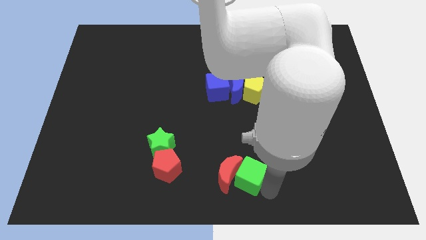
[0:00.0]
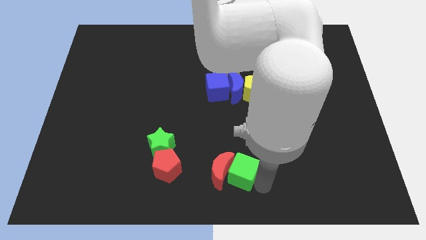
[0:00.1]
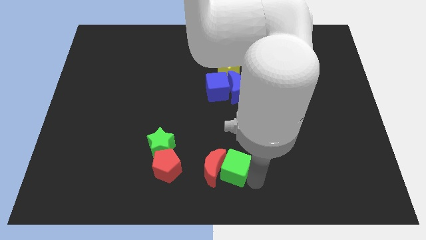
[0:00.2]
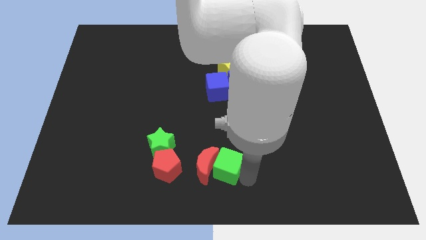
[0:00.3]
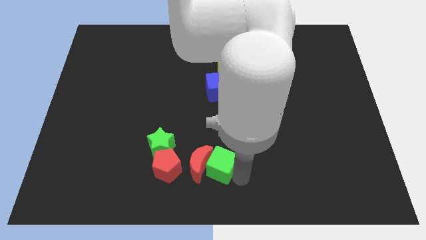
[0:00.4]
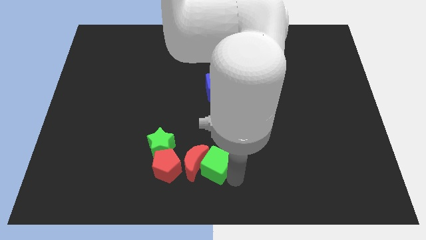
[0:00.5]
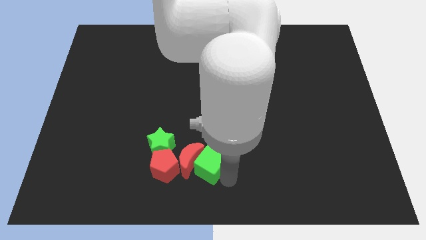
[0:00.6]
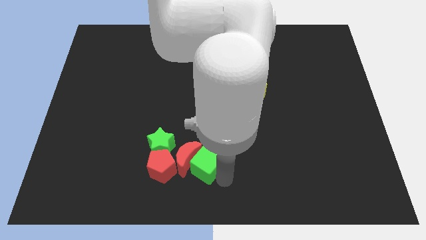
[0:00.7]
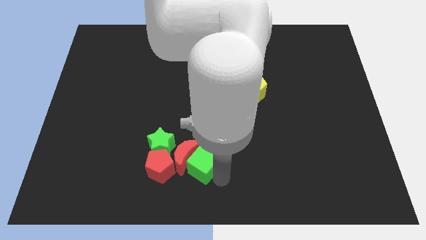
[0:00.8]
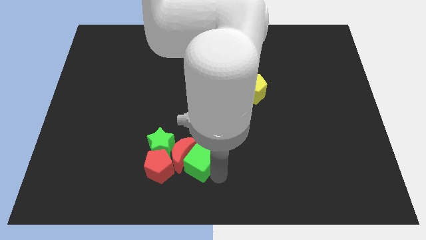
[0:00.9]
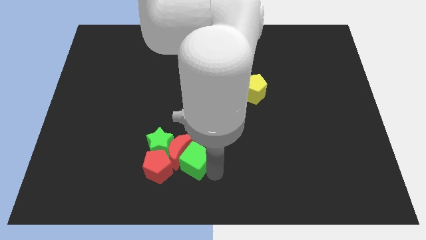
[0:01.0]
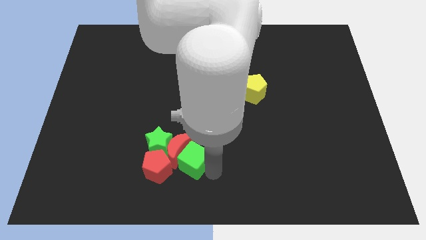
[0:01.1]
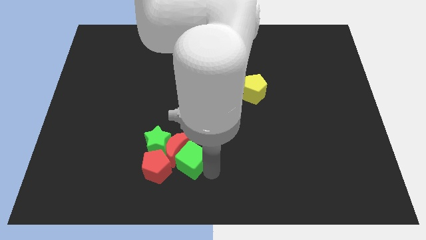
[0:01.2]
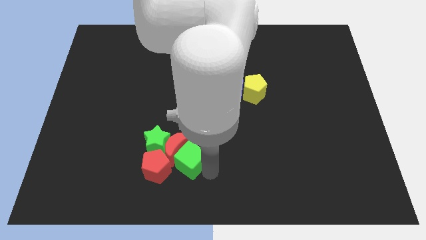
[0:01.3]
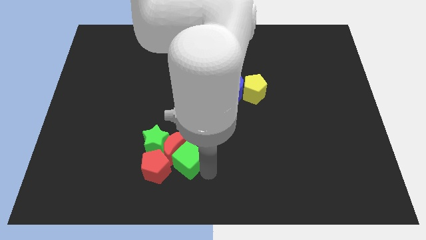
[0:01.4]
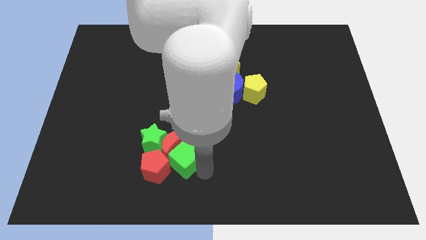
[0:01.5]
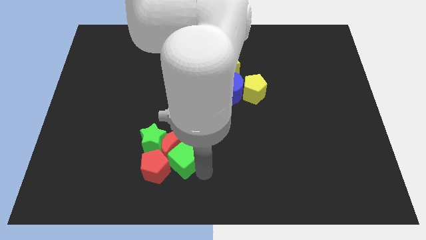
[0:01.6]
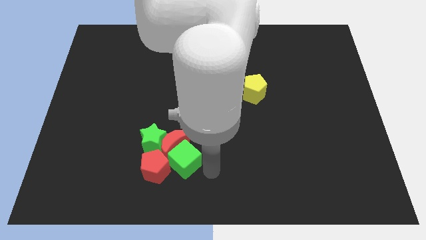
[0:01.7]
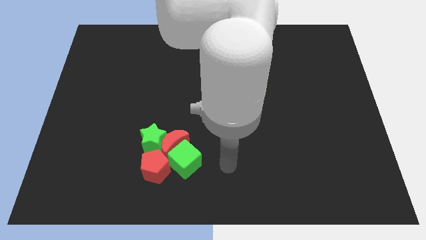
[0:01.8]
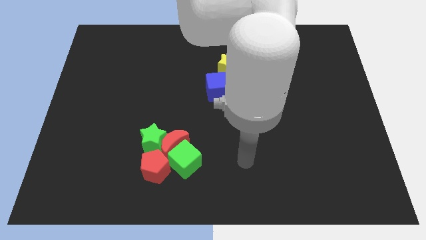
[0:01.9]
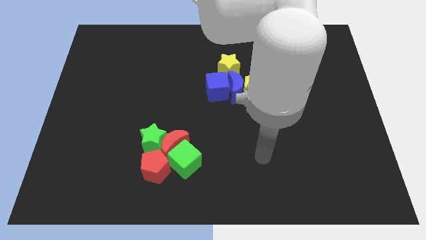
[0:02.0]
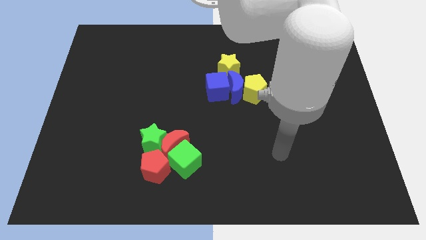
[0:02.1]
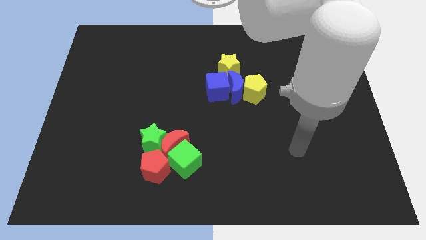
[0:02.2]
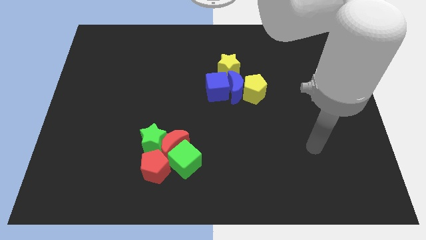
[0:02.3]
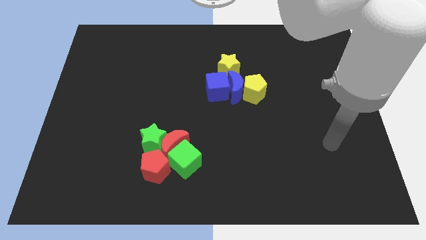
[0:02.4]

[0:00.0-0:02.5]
place the green cube right to the red pentagon

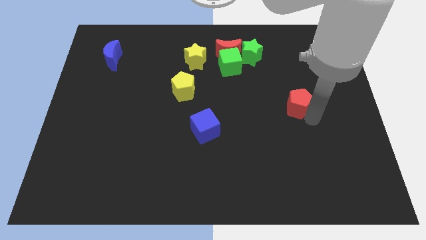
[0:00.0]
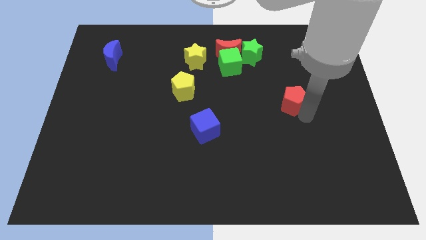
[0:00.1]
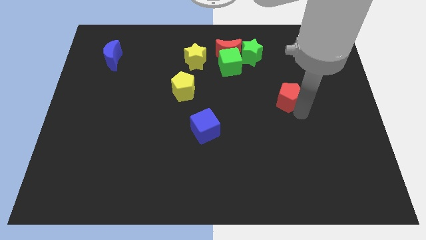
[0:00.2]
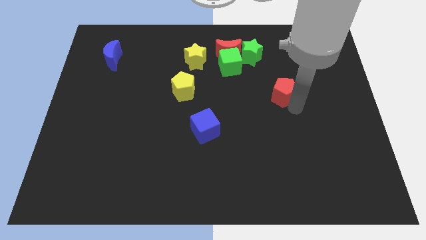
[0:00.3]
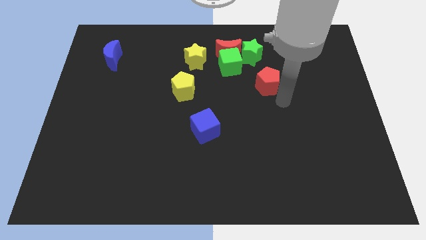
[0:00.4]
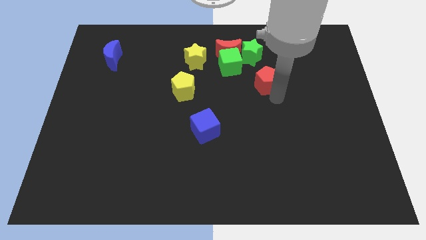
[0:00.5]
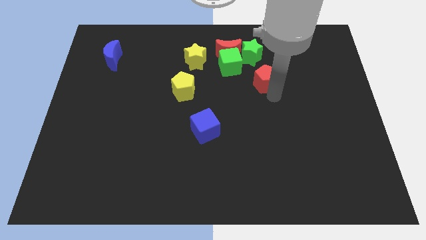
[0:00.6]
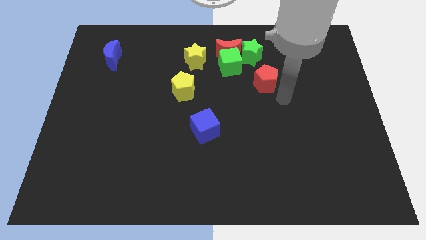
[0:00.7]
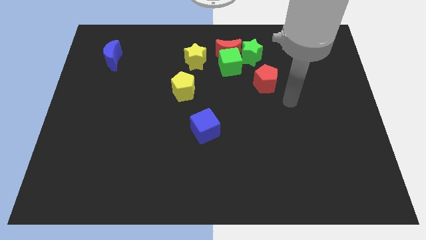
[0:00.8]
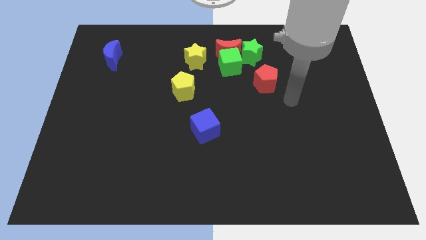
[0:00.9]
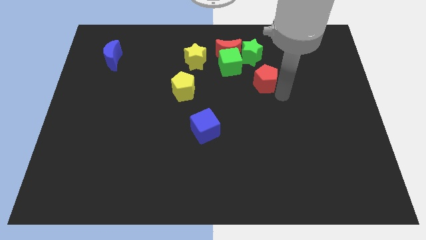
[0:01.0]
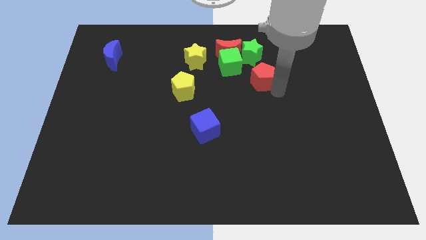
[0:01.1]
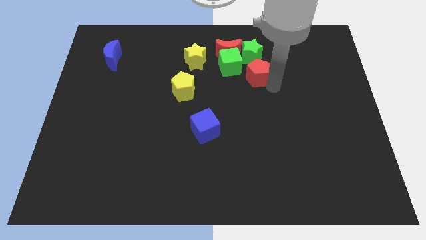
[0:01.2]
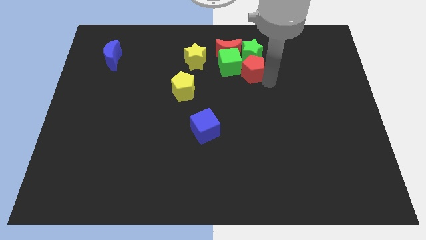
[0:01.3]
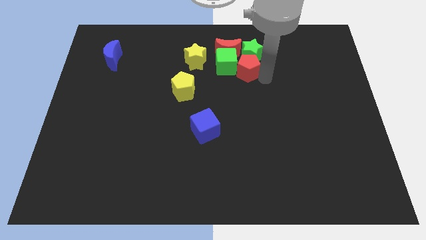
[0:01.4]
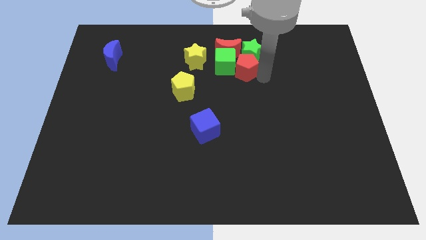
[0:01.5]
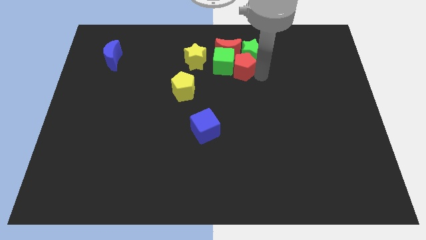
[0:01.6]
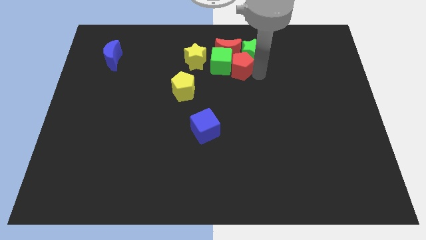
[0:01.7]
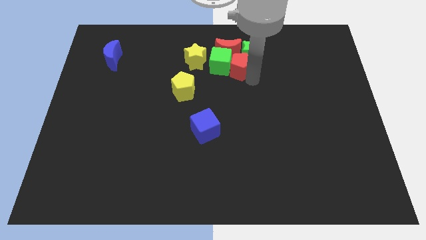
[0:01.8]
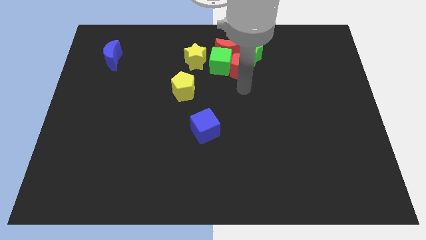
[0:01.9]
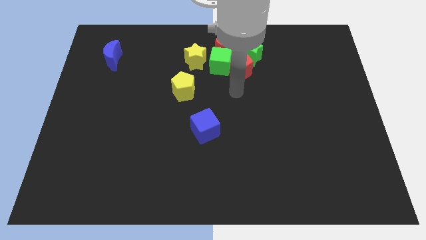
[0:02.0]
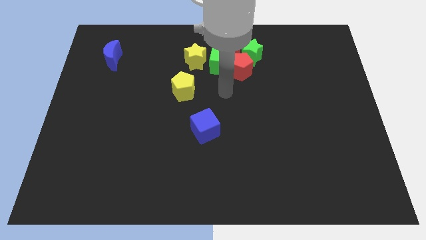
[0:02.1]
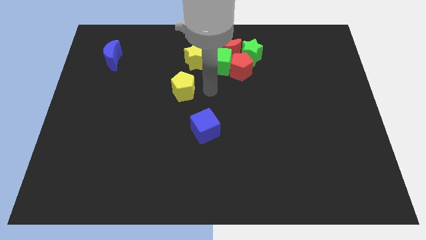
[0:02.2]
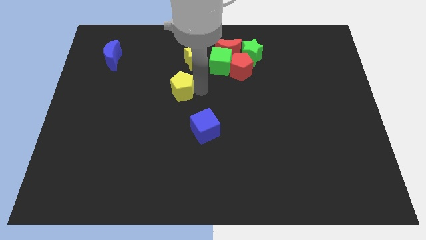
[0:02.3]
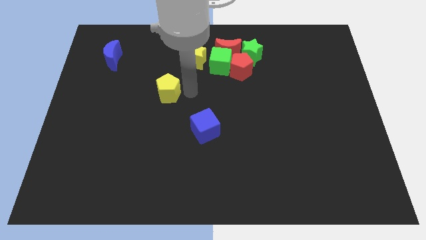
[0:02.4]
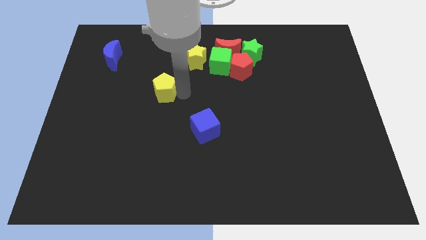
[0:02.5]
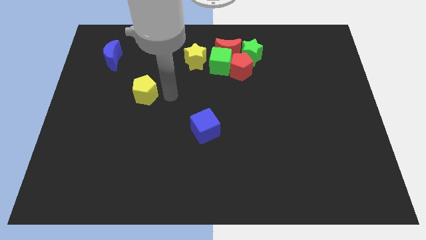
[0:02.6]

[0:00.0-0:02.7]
push the red pentagon into the green cube and star

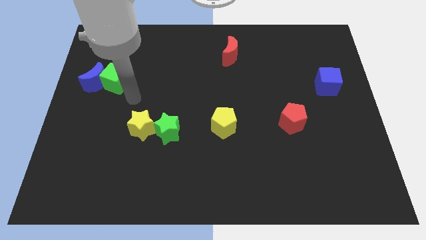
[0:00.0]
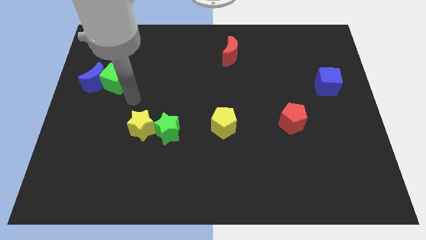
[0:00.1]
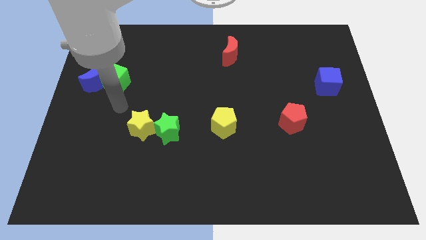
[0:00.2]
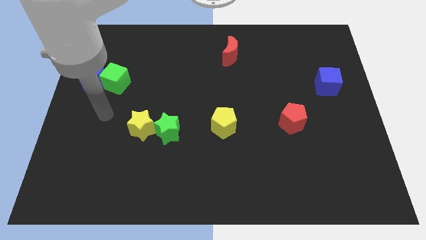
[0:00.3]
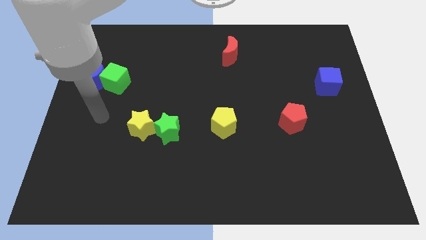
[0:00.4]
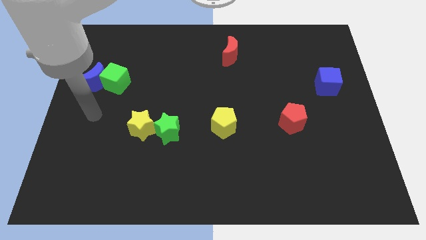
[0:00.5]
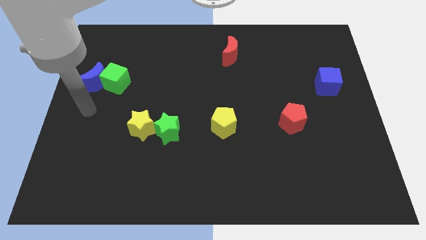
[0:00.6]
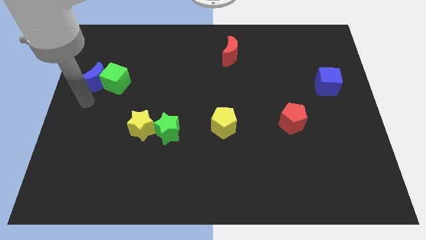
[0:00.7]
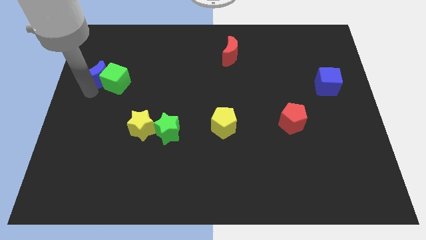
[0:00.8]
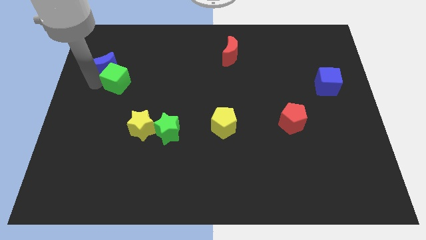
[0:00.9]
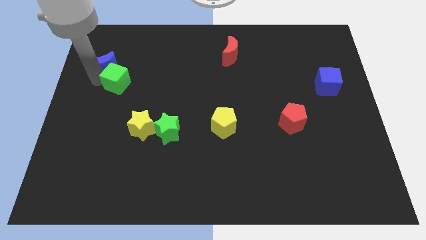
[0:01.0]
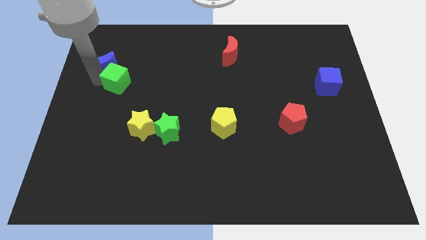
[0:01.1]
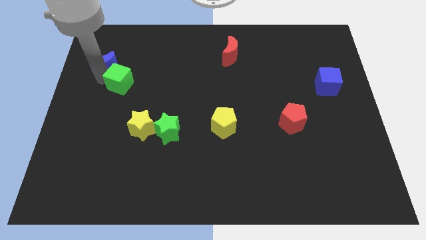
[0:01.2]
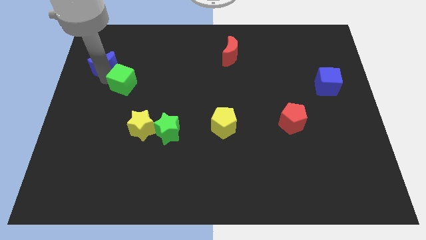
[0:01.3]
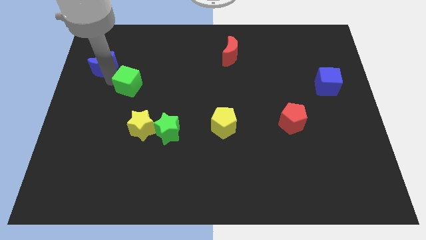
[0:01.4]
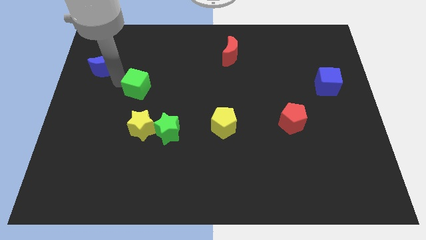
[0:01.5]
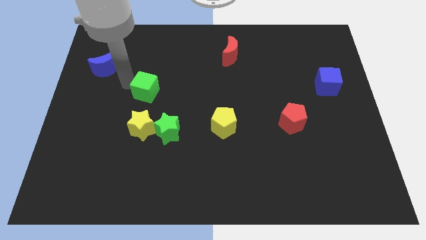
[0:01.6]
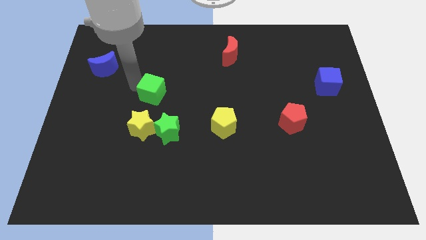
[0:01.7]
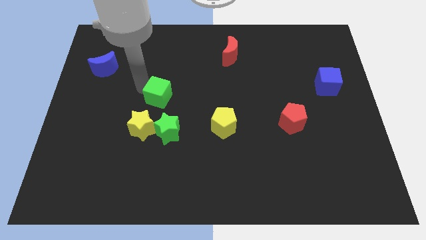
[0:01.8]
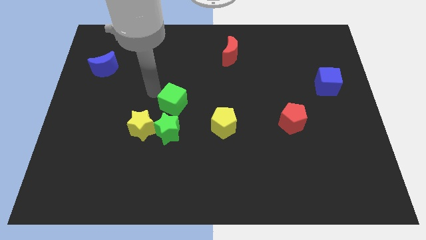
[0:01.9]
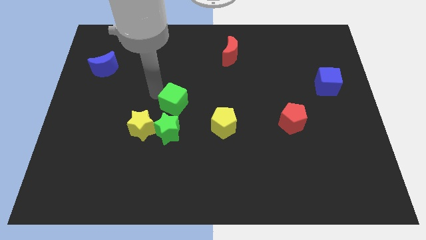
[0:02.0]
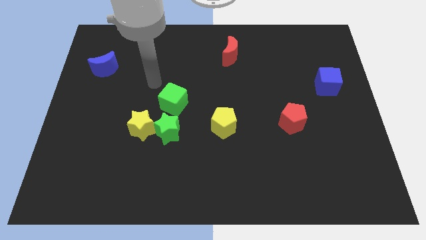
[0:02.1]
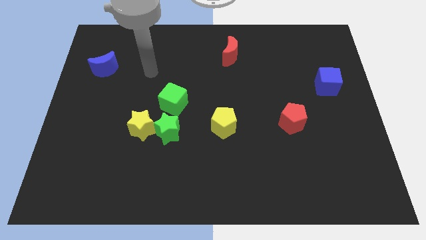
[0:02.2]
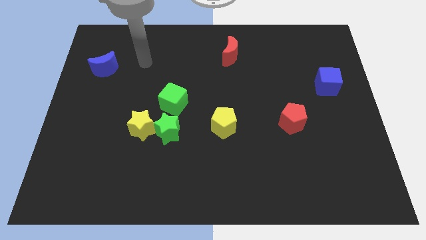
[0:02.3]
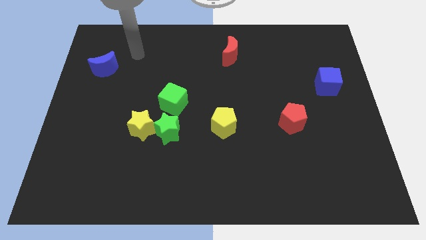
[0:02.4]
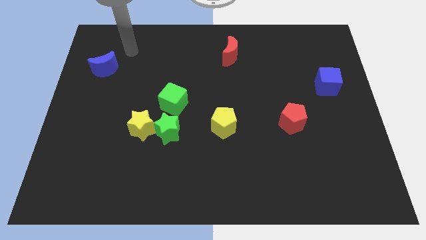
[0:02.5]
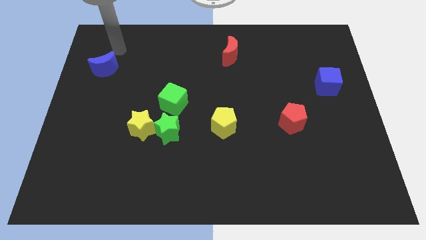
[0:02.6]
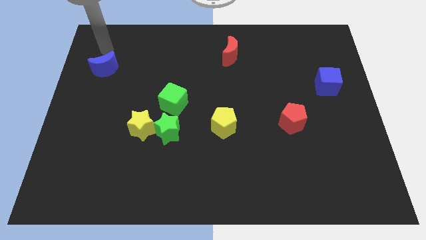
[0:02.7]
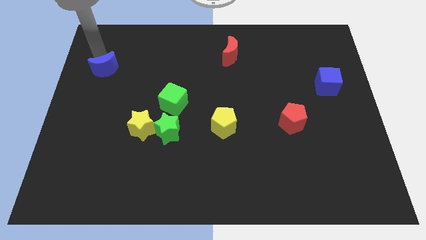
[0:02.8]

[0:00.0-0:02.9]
separate the green cube from bluemoon

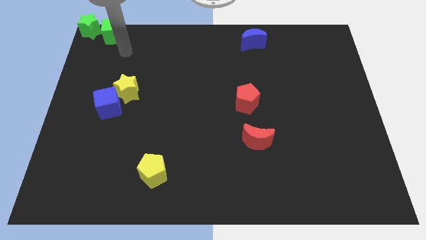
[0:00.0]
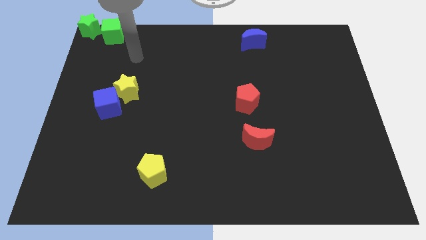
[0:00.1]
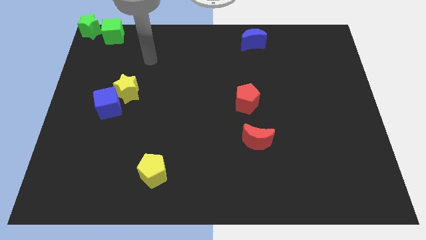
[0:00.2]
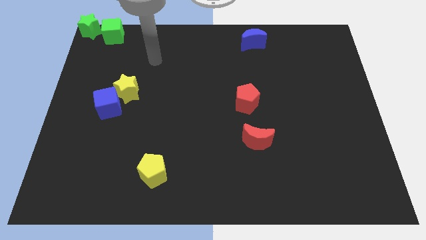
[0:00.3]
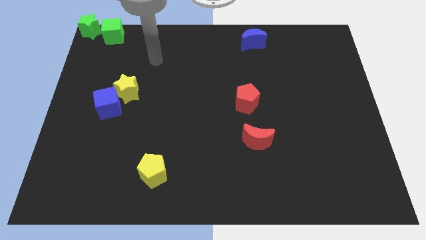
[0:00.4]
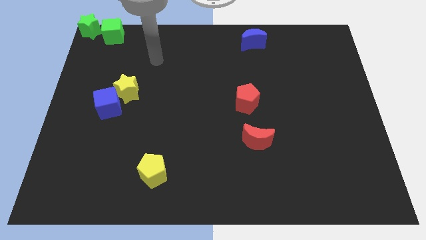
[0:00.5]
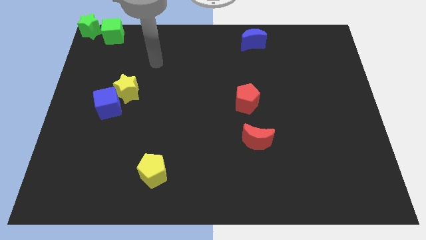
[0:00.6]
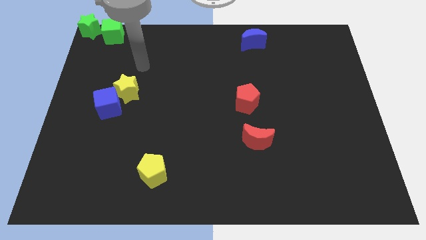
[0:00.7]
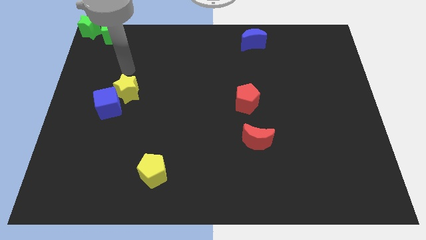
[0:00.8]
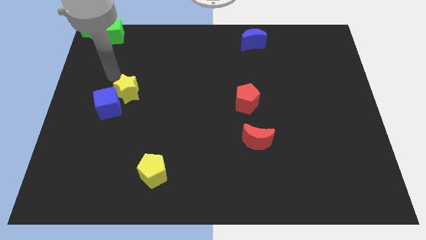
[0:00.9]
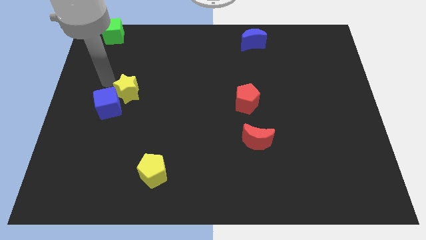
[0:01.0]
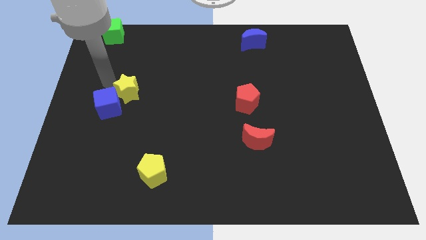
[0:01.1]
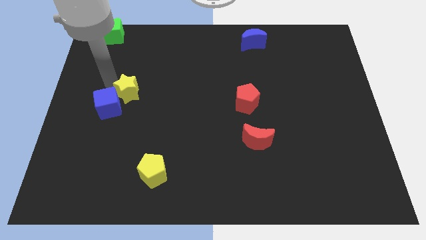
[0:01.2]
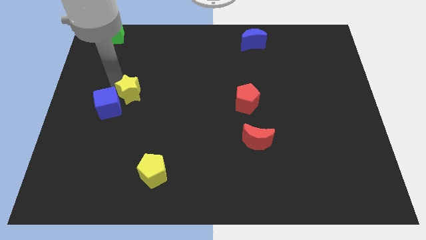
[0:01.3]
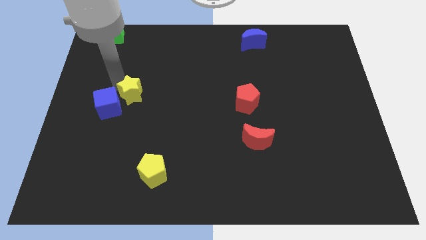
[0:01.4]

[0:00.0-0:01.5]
touch the yellow star with your arm
